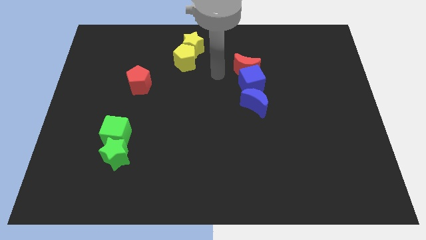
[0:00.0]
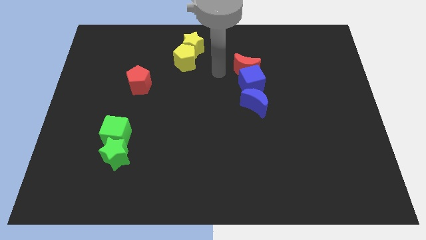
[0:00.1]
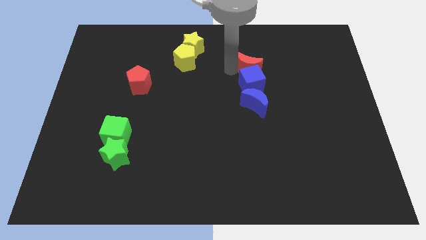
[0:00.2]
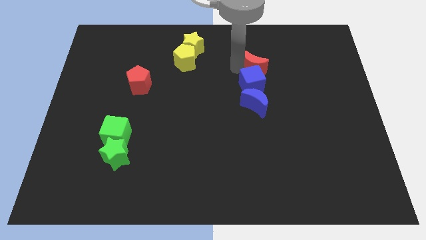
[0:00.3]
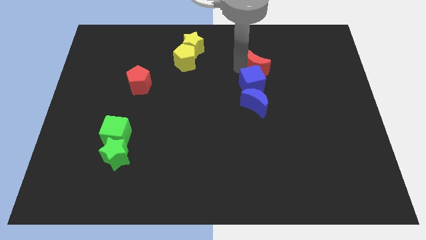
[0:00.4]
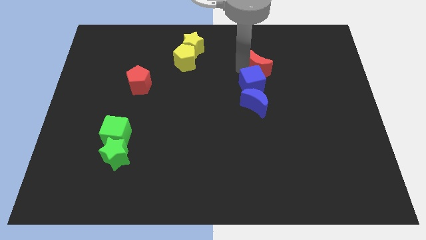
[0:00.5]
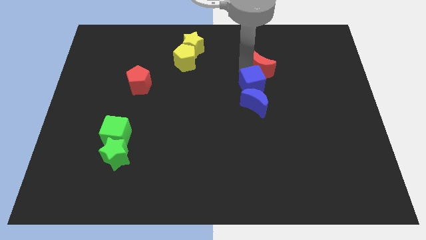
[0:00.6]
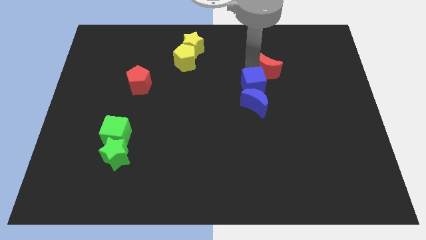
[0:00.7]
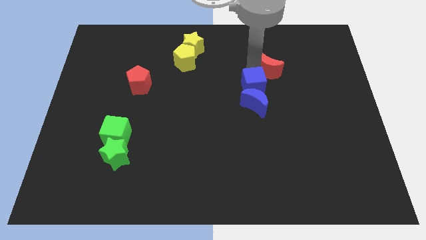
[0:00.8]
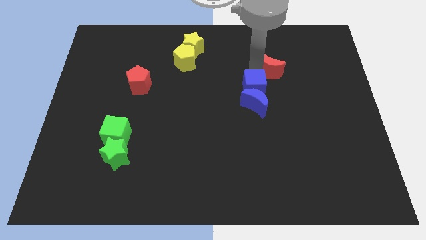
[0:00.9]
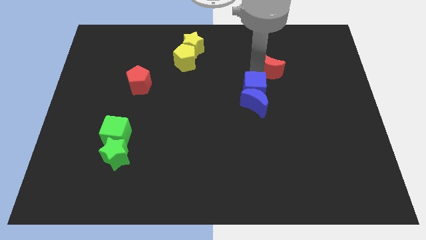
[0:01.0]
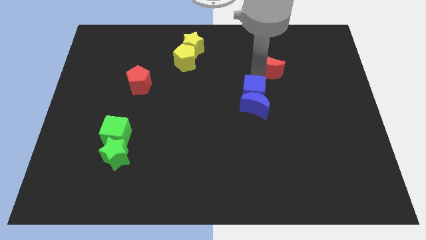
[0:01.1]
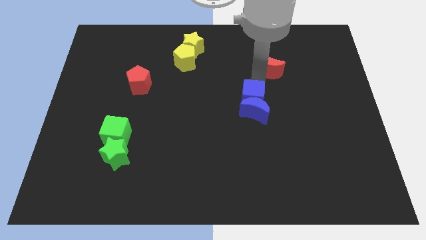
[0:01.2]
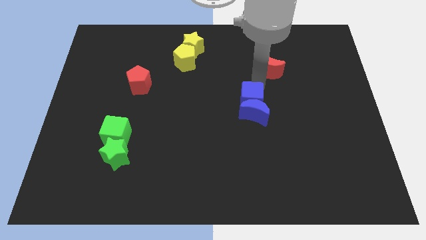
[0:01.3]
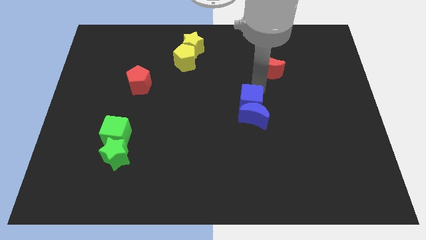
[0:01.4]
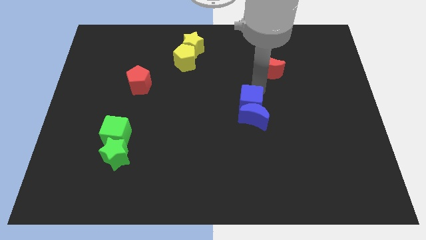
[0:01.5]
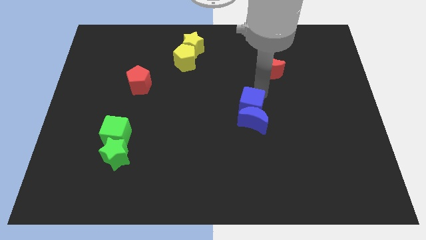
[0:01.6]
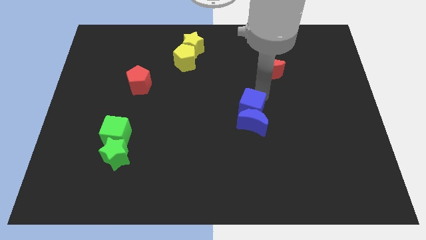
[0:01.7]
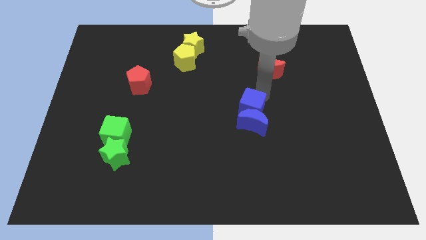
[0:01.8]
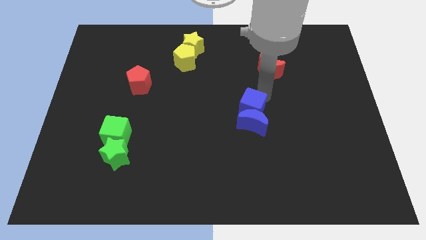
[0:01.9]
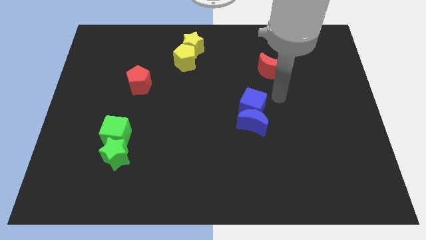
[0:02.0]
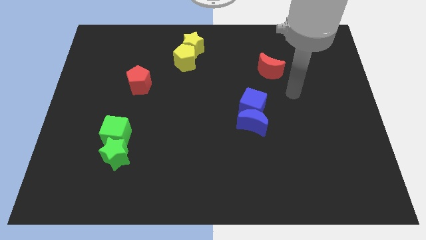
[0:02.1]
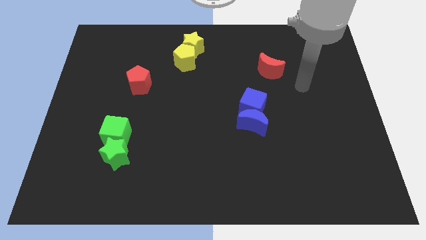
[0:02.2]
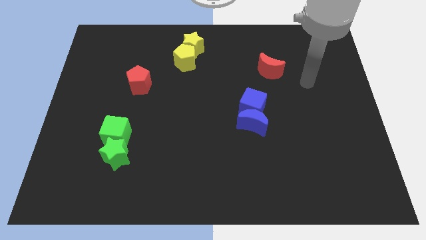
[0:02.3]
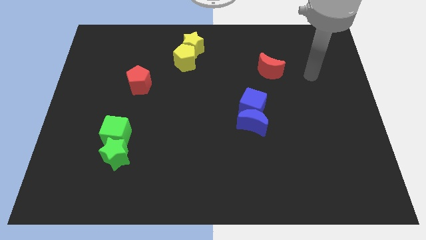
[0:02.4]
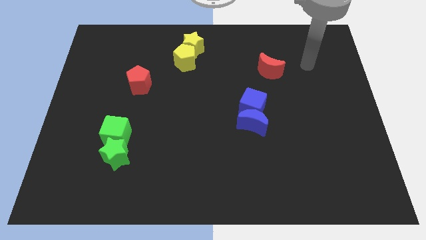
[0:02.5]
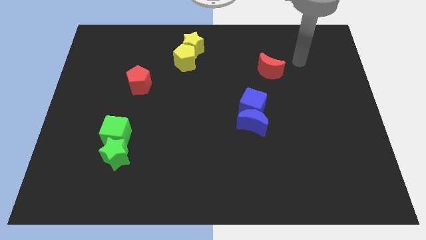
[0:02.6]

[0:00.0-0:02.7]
push blue cube and blue moon towards bottom

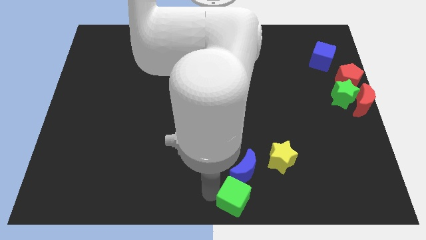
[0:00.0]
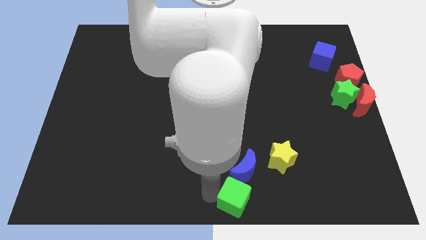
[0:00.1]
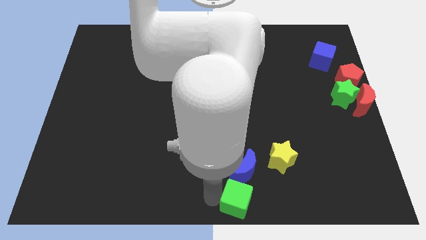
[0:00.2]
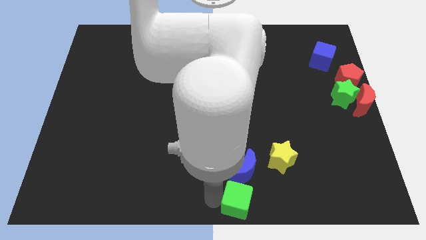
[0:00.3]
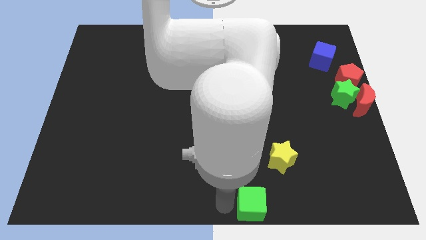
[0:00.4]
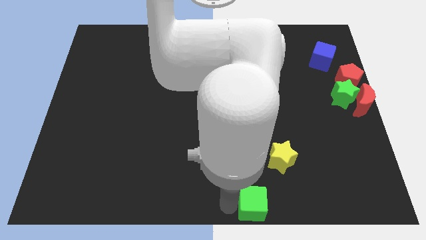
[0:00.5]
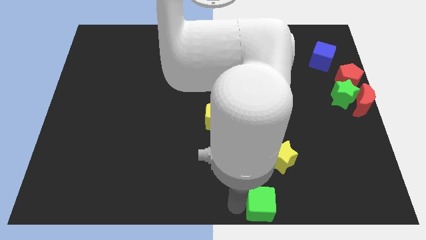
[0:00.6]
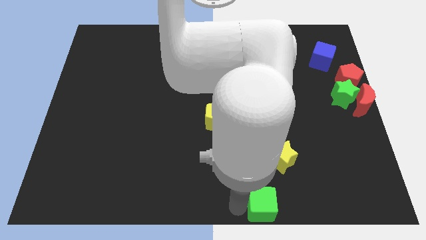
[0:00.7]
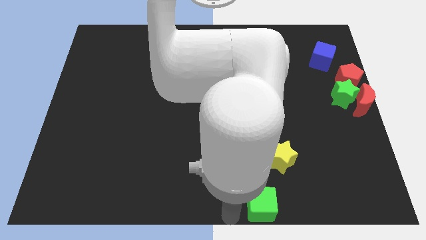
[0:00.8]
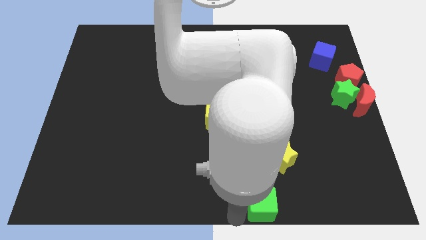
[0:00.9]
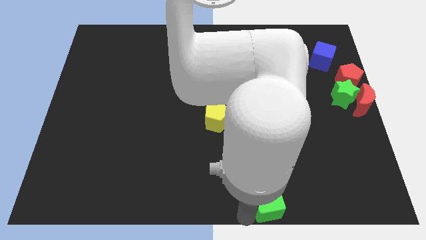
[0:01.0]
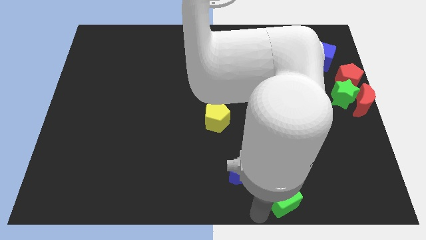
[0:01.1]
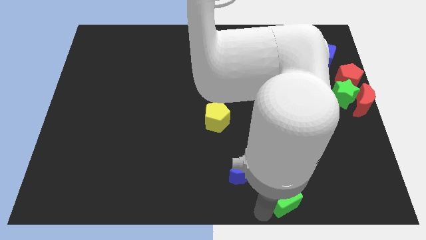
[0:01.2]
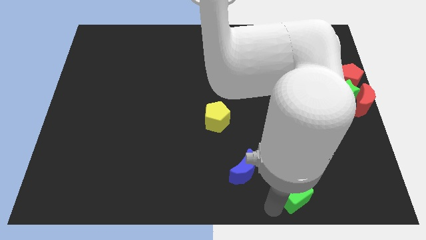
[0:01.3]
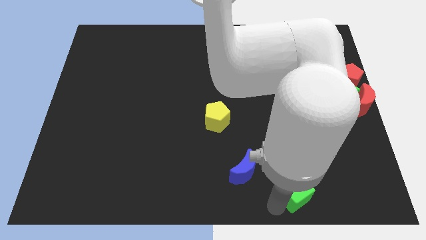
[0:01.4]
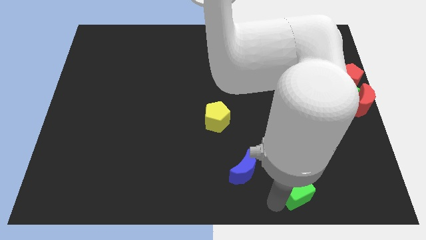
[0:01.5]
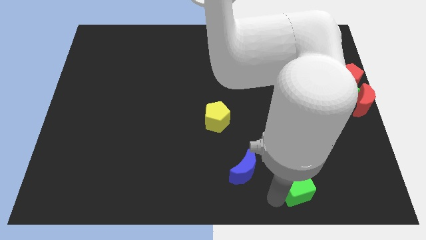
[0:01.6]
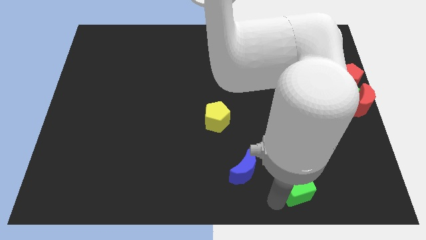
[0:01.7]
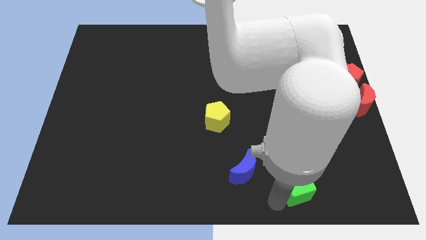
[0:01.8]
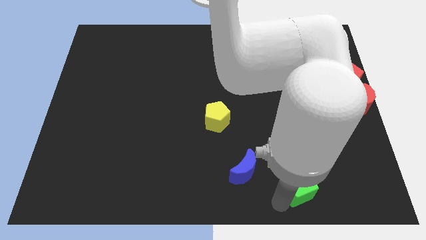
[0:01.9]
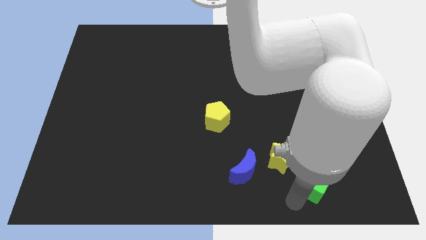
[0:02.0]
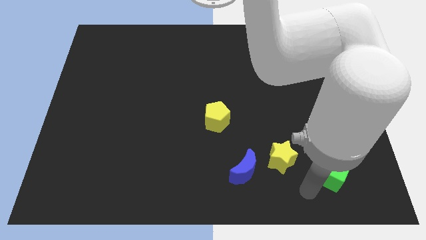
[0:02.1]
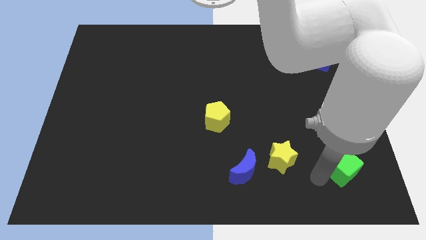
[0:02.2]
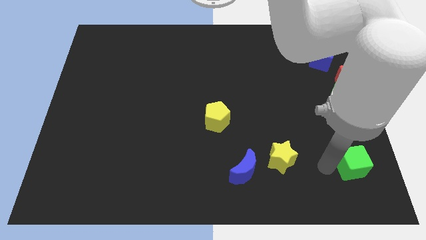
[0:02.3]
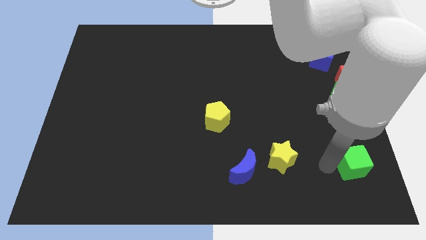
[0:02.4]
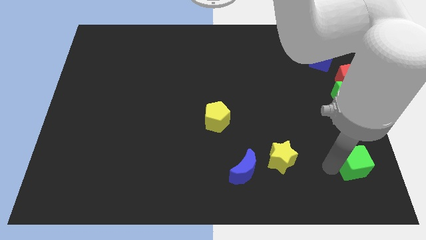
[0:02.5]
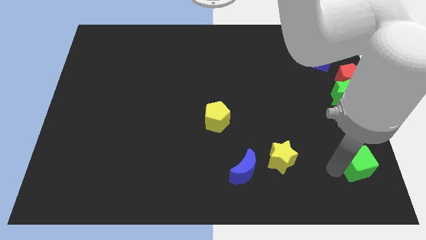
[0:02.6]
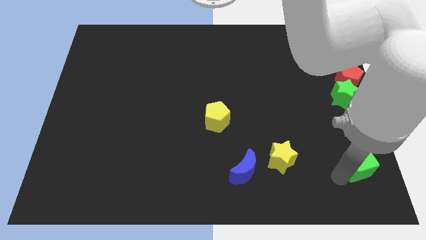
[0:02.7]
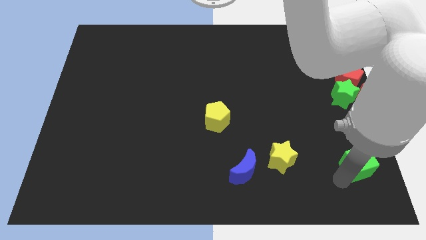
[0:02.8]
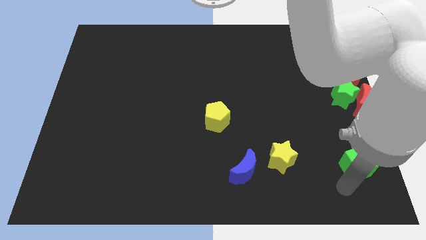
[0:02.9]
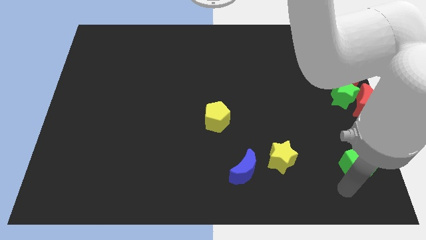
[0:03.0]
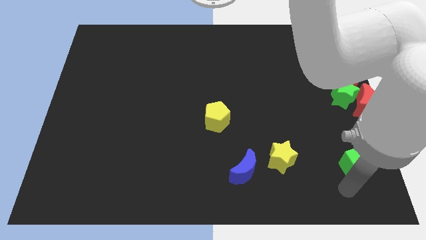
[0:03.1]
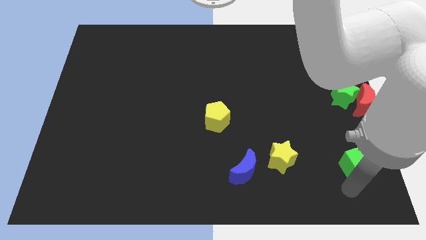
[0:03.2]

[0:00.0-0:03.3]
push the green cube parallel to the right of the yellow star

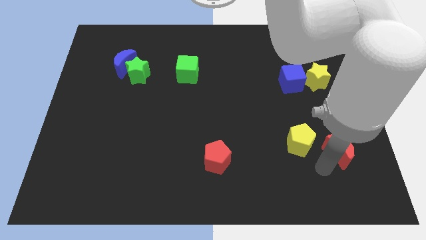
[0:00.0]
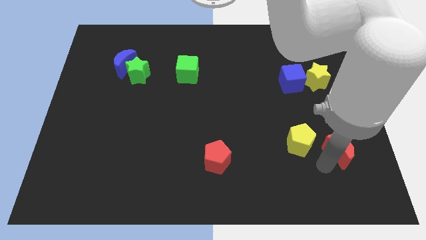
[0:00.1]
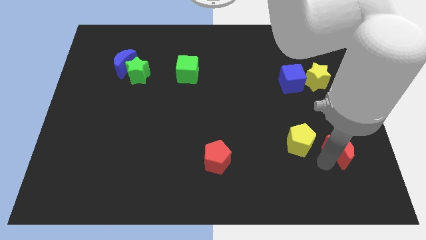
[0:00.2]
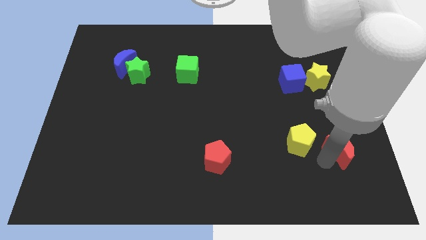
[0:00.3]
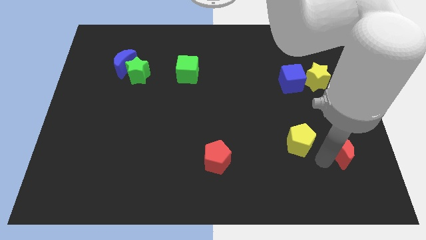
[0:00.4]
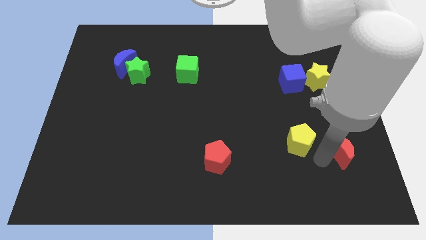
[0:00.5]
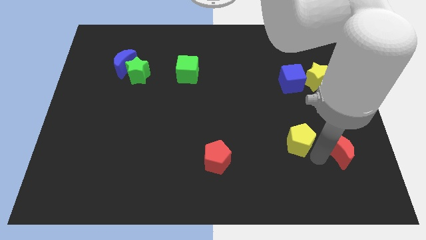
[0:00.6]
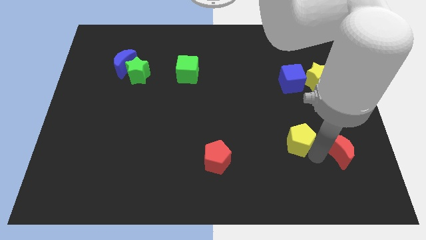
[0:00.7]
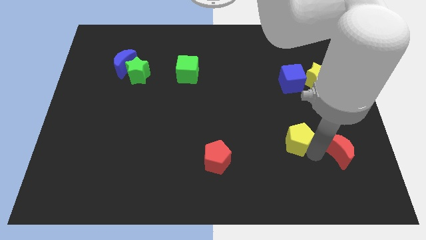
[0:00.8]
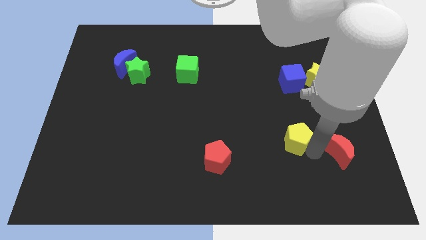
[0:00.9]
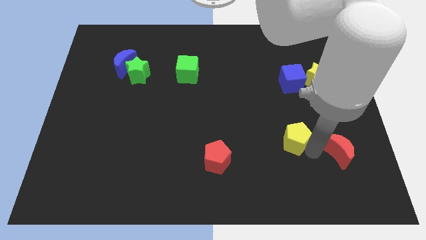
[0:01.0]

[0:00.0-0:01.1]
tap the bottom right side of the yellow pentagon

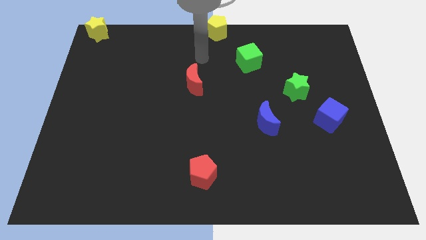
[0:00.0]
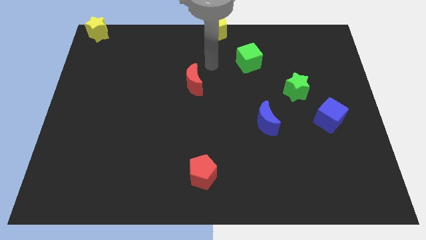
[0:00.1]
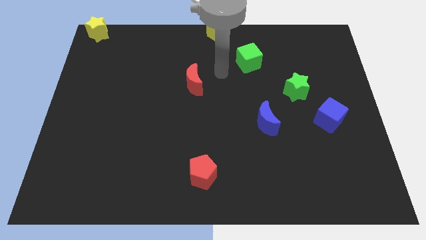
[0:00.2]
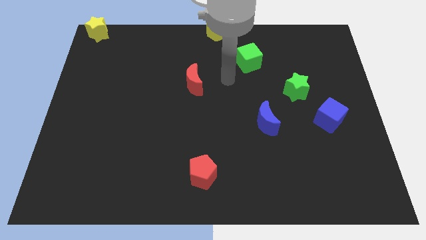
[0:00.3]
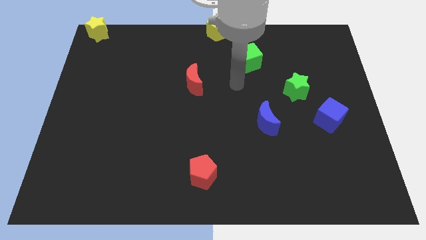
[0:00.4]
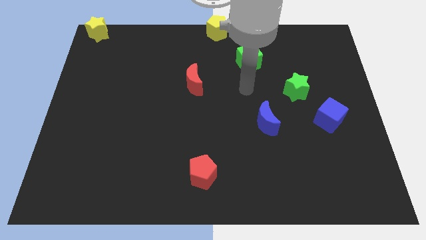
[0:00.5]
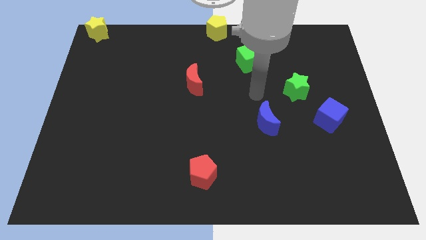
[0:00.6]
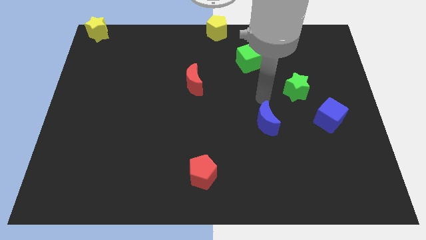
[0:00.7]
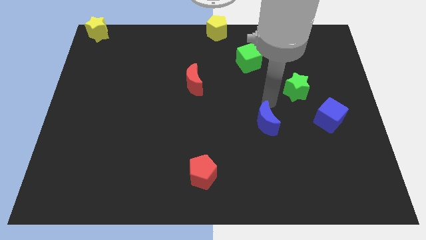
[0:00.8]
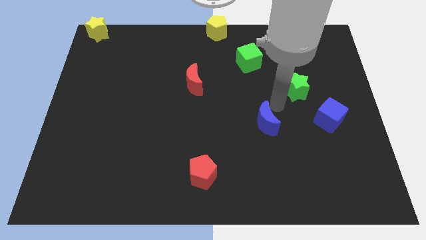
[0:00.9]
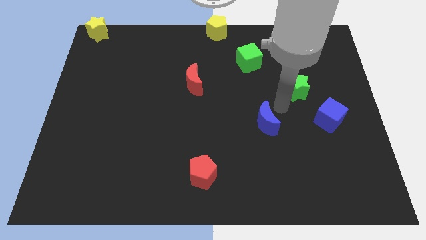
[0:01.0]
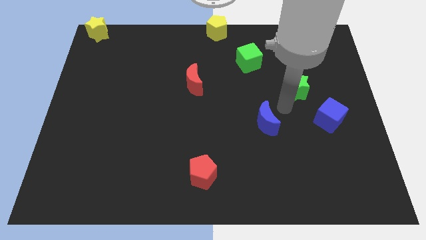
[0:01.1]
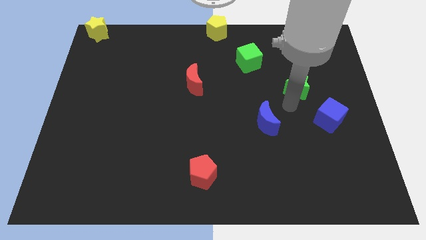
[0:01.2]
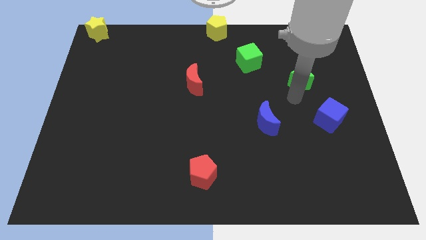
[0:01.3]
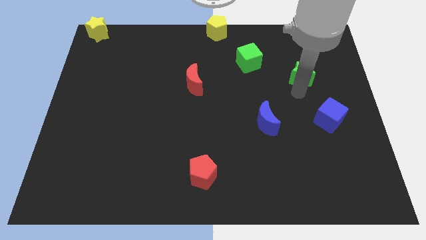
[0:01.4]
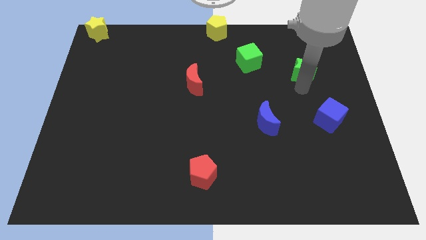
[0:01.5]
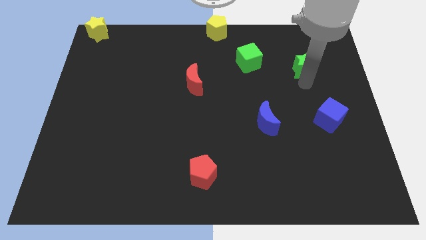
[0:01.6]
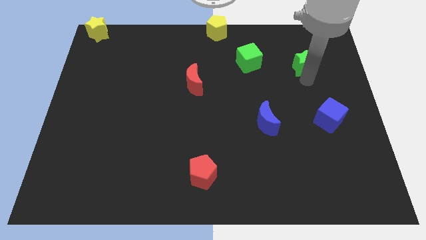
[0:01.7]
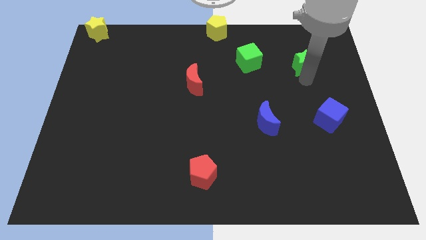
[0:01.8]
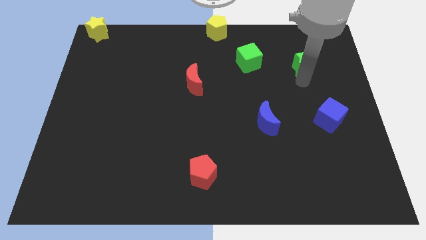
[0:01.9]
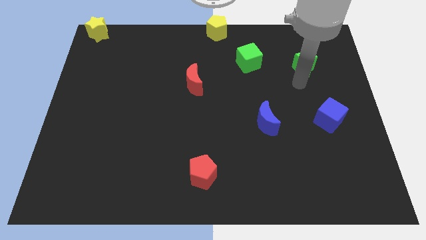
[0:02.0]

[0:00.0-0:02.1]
move green star to the right of green cube
